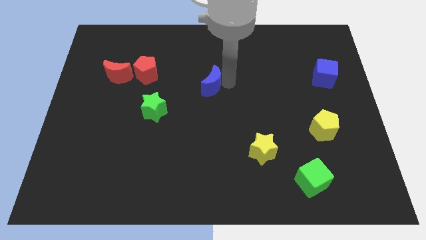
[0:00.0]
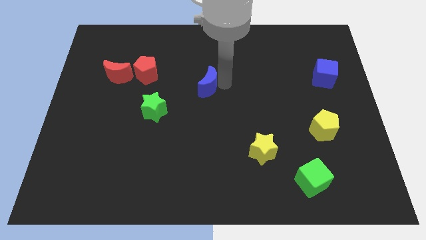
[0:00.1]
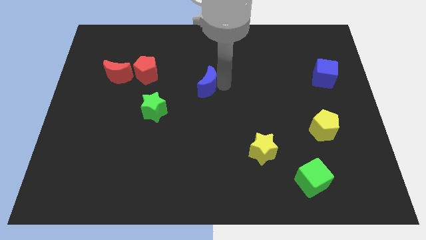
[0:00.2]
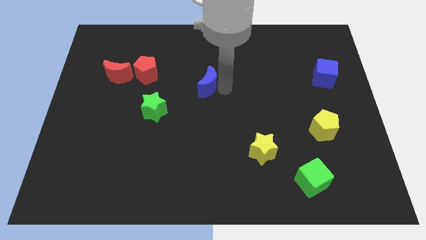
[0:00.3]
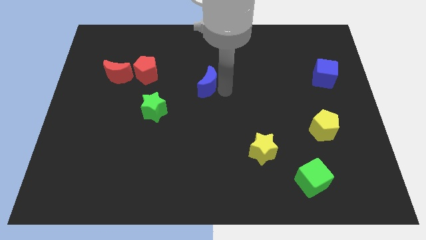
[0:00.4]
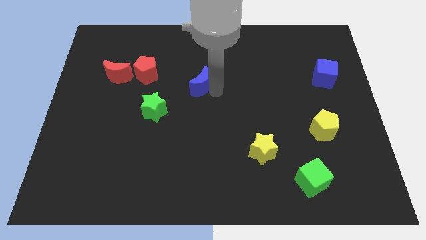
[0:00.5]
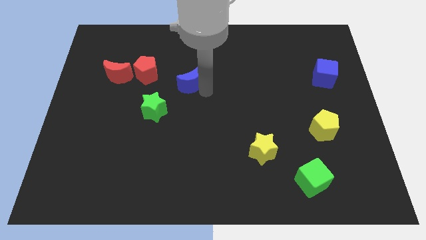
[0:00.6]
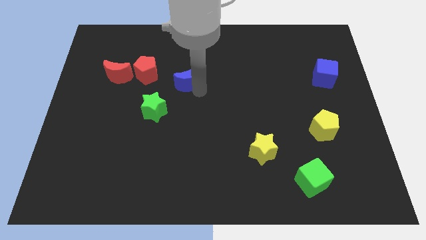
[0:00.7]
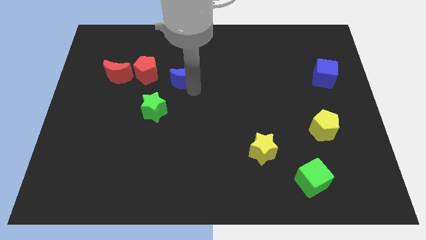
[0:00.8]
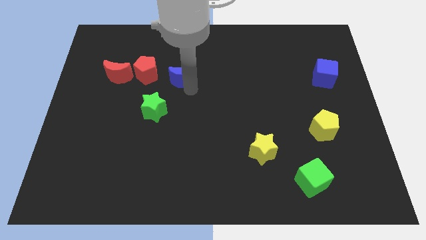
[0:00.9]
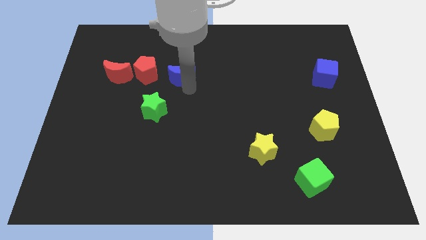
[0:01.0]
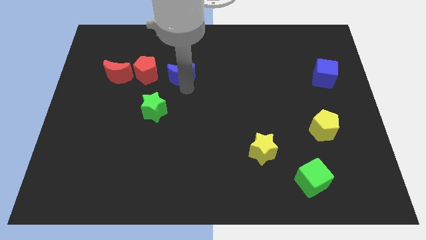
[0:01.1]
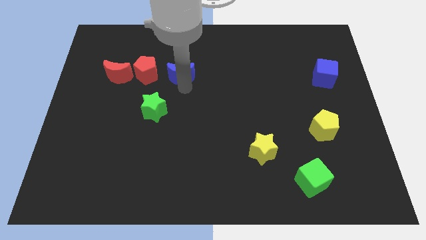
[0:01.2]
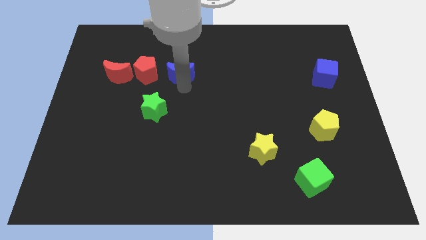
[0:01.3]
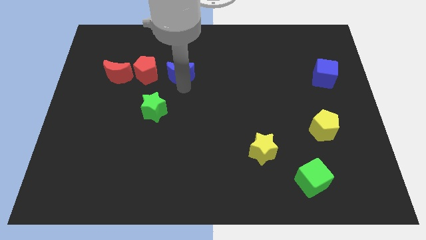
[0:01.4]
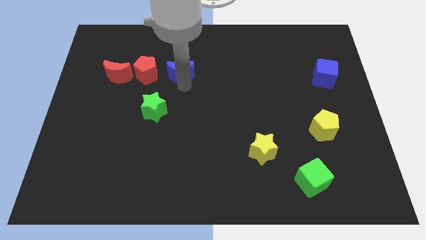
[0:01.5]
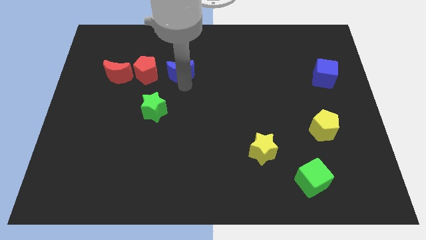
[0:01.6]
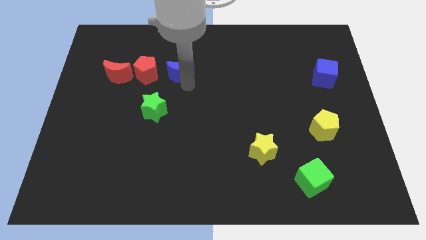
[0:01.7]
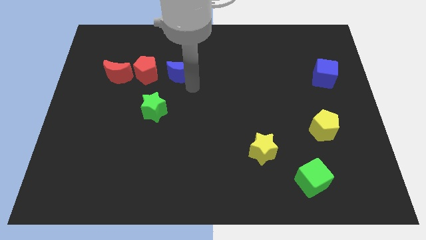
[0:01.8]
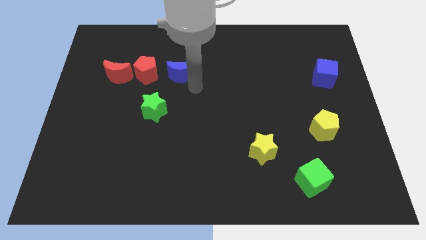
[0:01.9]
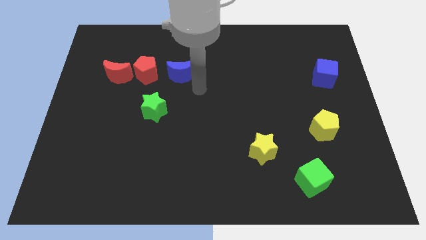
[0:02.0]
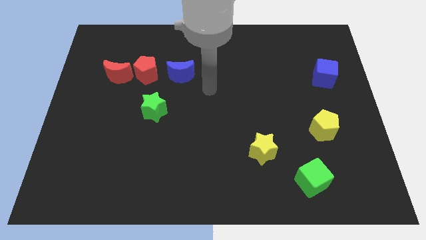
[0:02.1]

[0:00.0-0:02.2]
move the blue moon right to the red pentagon

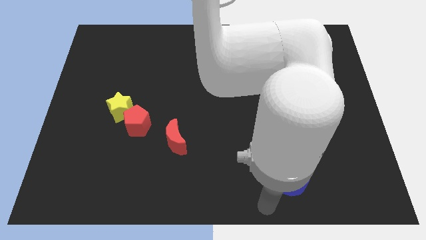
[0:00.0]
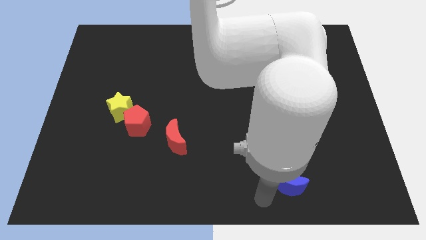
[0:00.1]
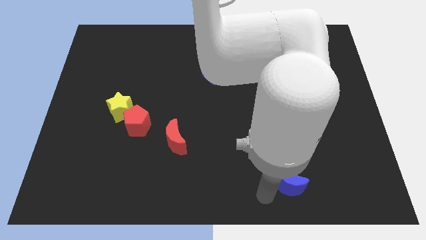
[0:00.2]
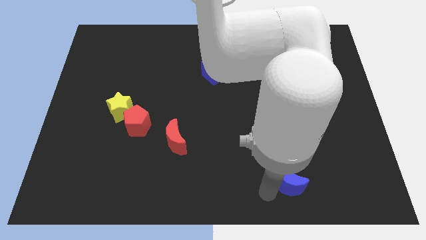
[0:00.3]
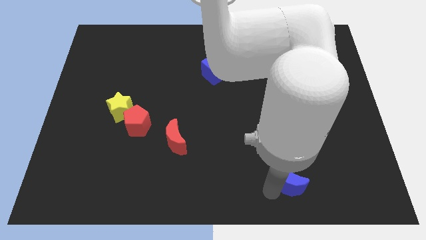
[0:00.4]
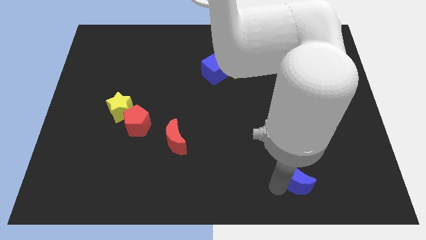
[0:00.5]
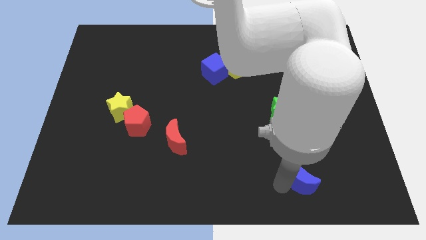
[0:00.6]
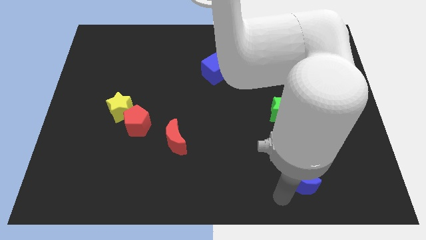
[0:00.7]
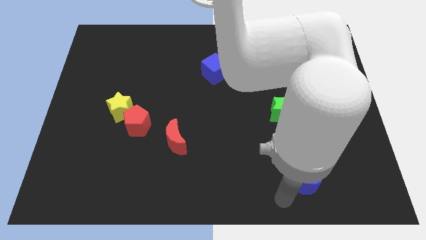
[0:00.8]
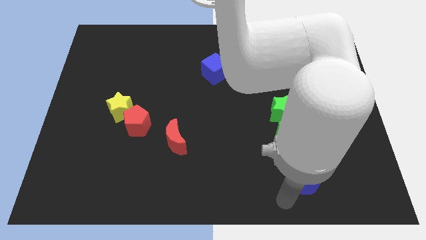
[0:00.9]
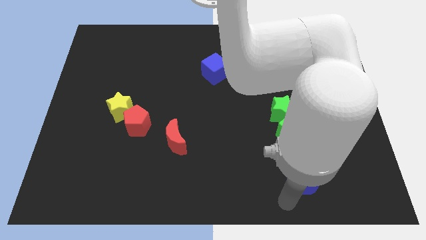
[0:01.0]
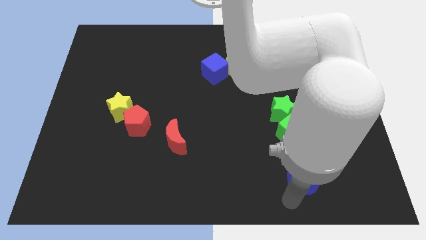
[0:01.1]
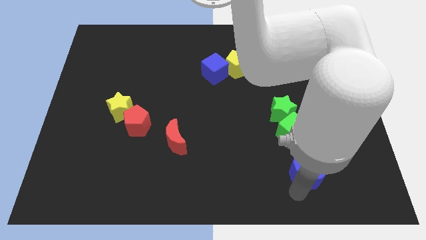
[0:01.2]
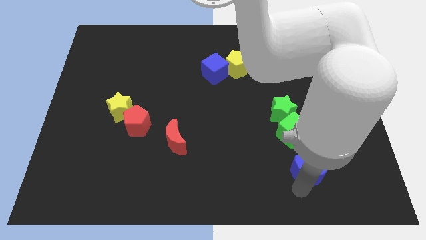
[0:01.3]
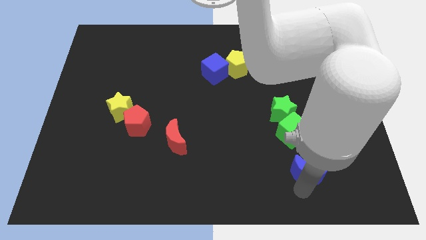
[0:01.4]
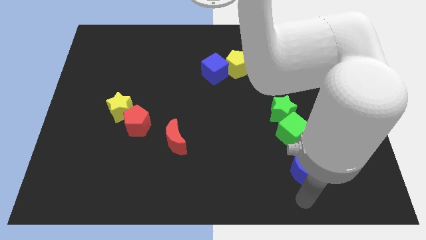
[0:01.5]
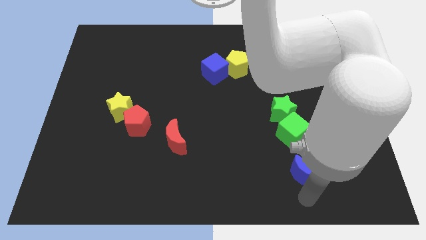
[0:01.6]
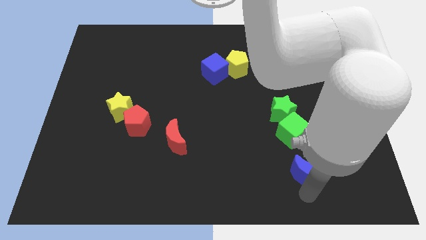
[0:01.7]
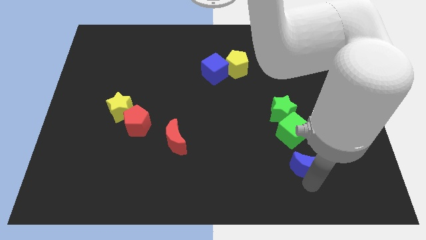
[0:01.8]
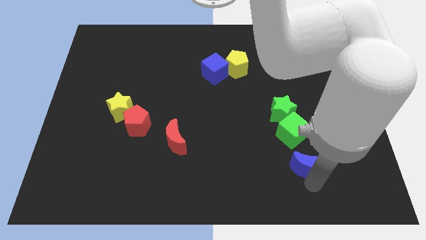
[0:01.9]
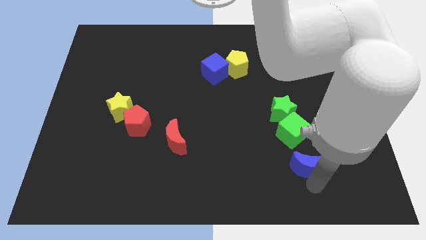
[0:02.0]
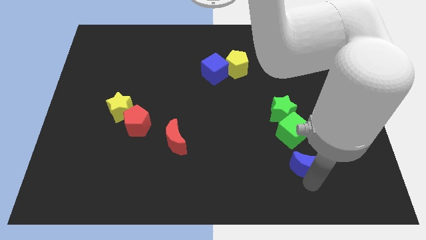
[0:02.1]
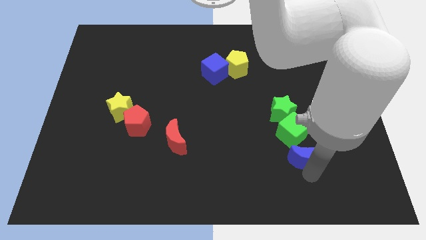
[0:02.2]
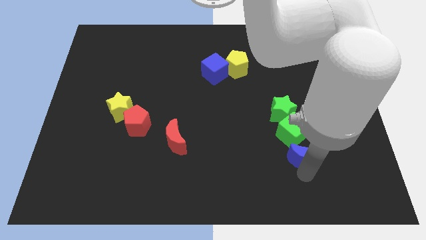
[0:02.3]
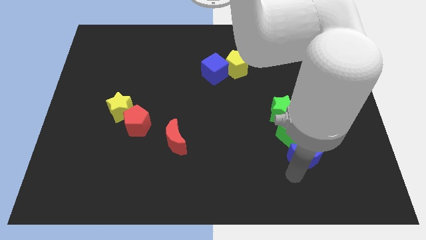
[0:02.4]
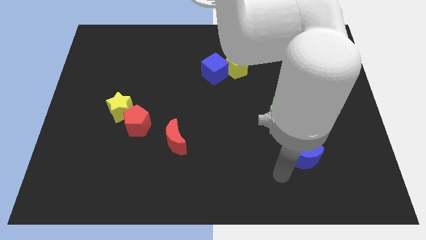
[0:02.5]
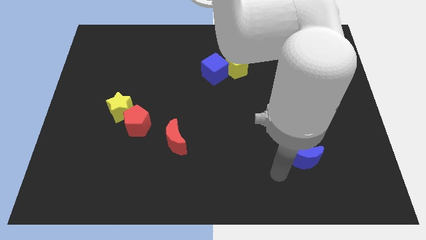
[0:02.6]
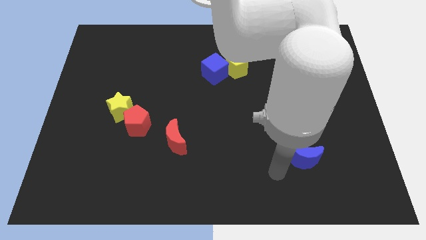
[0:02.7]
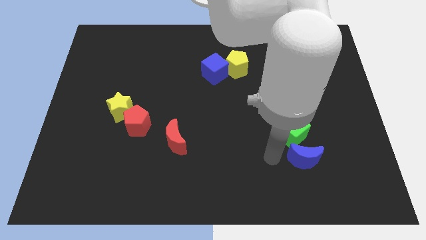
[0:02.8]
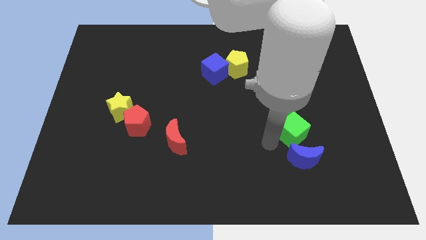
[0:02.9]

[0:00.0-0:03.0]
drag the blue moon upwards near the green cube

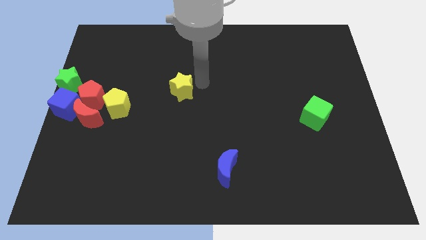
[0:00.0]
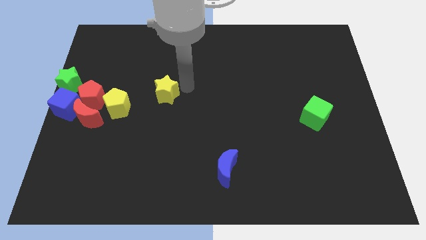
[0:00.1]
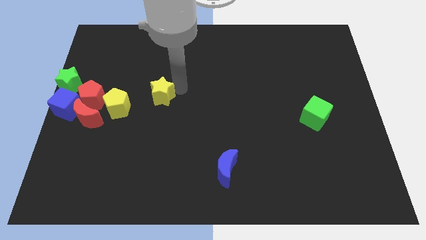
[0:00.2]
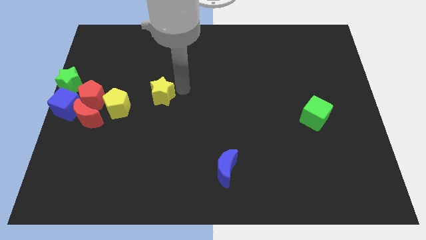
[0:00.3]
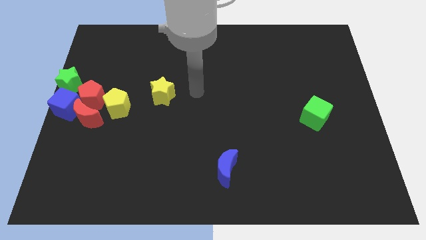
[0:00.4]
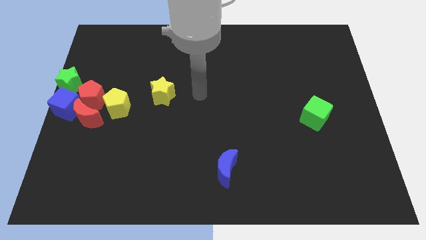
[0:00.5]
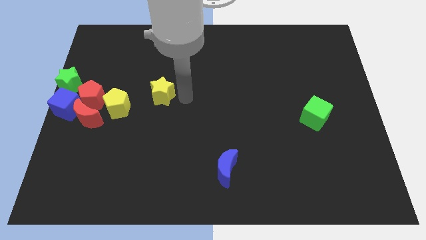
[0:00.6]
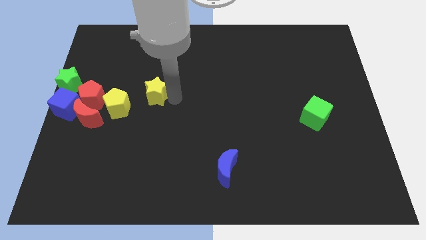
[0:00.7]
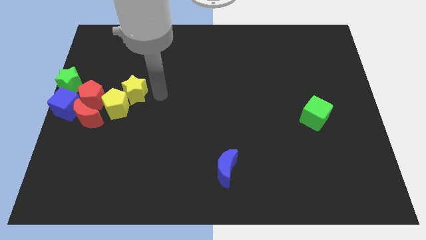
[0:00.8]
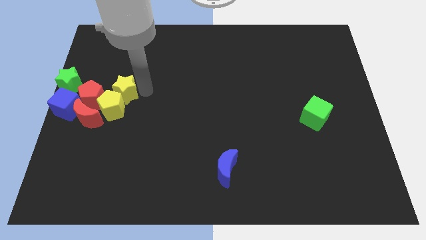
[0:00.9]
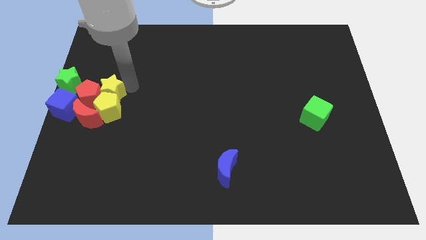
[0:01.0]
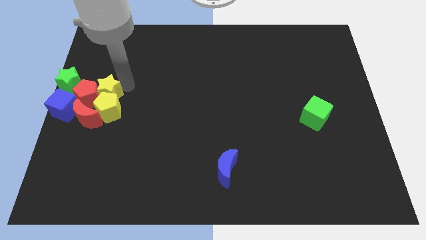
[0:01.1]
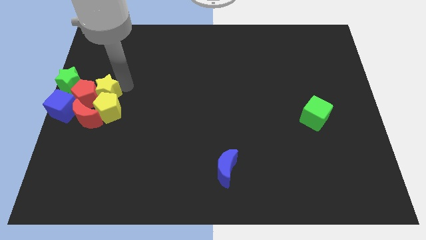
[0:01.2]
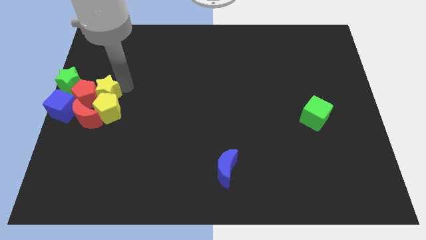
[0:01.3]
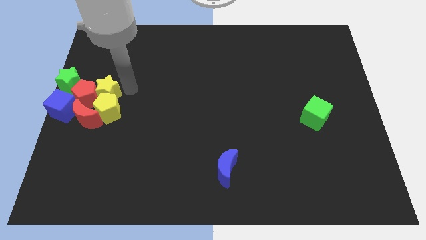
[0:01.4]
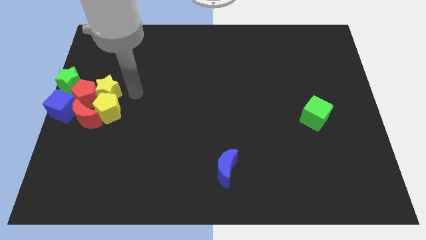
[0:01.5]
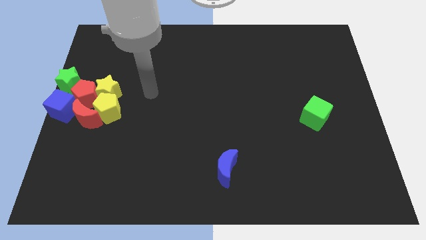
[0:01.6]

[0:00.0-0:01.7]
place yellow star to the top of yellow pentagon

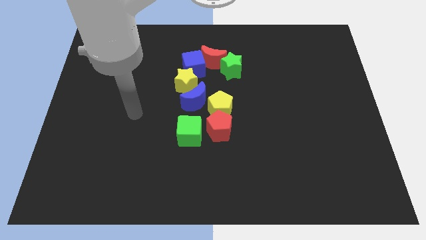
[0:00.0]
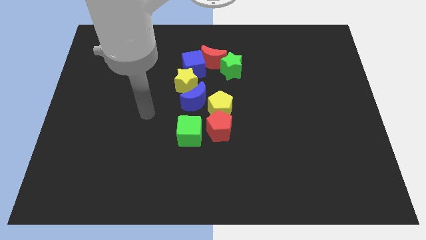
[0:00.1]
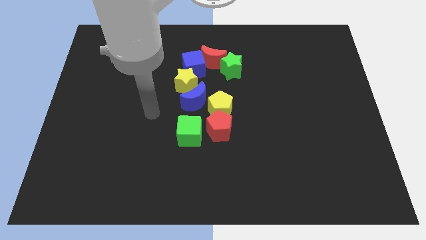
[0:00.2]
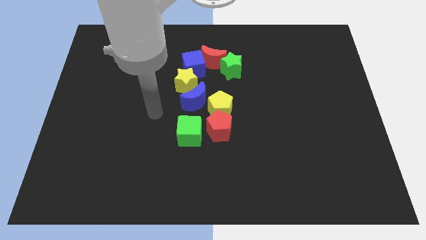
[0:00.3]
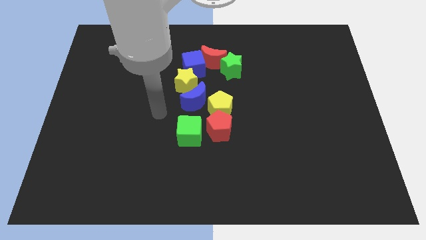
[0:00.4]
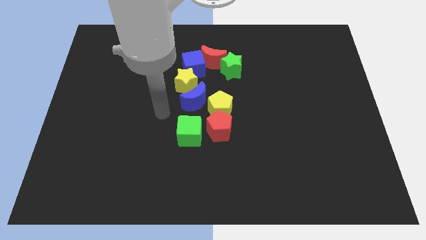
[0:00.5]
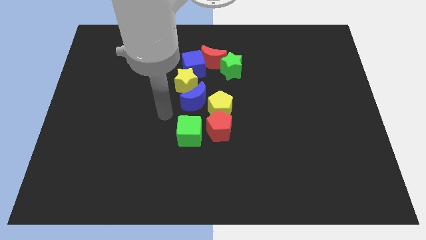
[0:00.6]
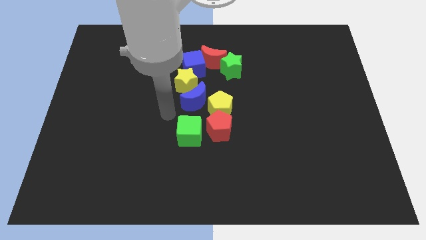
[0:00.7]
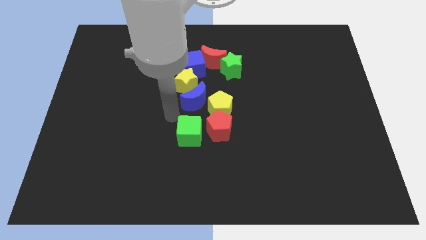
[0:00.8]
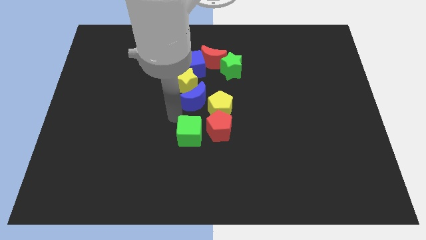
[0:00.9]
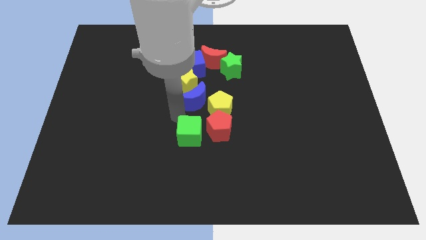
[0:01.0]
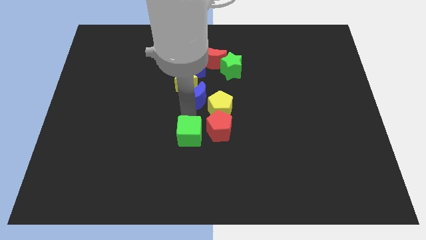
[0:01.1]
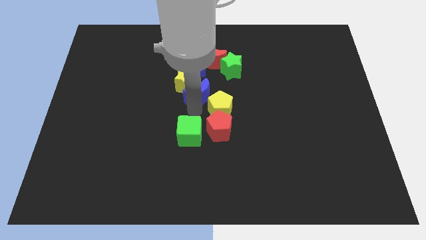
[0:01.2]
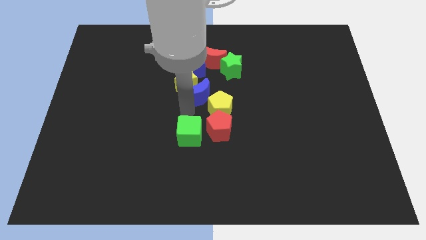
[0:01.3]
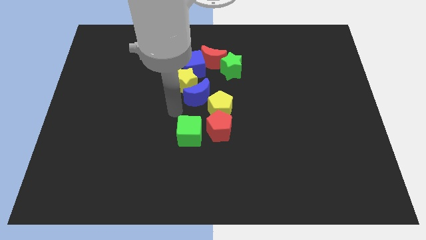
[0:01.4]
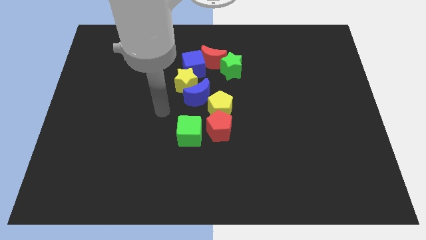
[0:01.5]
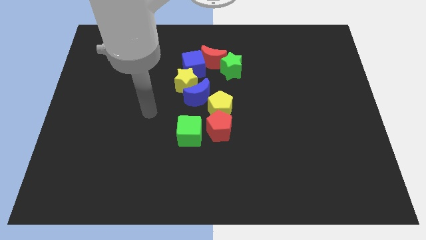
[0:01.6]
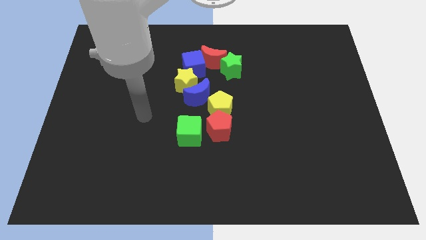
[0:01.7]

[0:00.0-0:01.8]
slightly move the blue crescent towards top

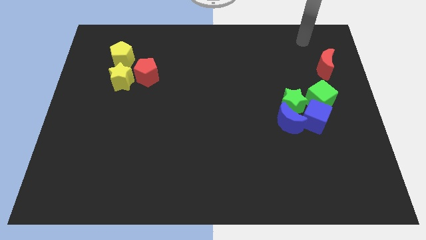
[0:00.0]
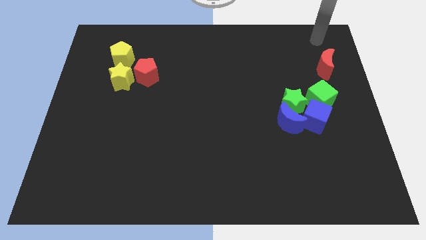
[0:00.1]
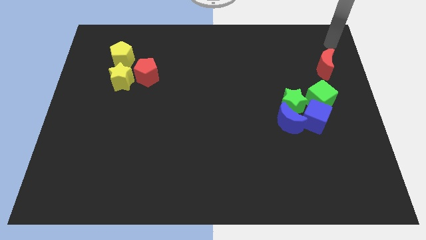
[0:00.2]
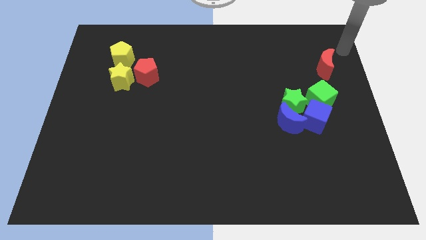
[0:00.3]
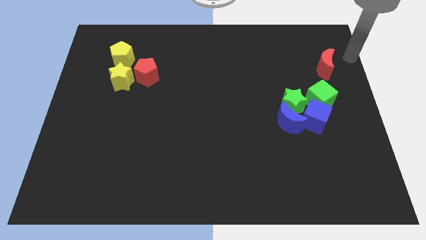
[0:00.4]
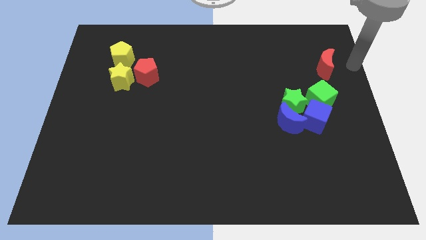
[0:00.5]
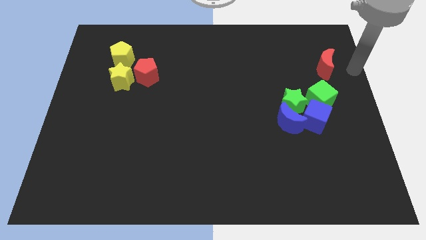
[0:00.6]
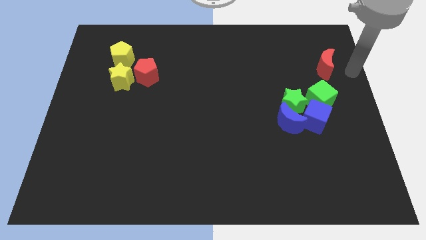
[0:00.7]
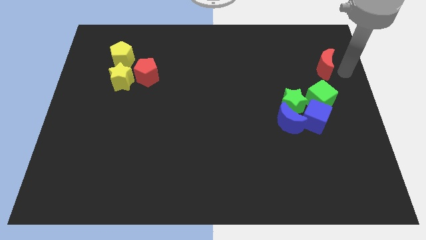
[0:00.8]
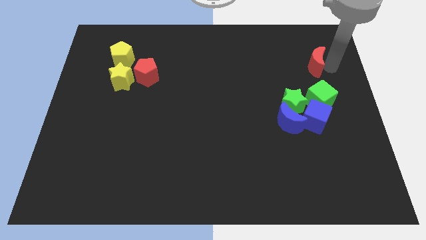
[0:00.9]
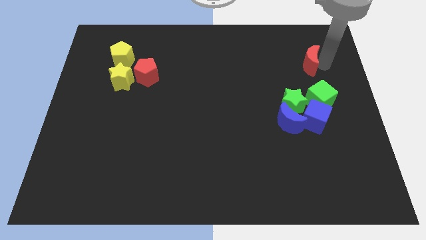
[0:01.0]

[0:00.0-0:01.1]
place the arm into the red crescent
